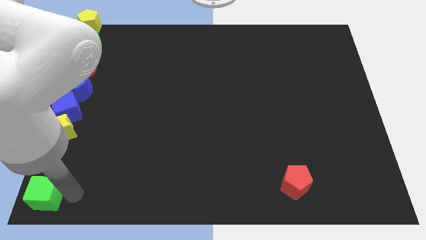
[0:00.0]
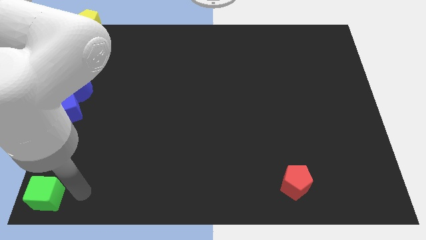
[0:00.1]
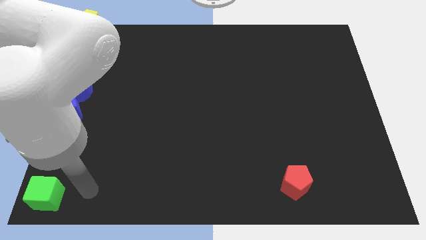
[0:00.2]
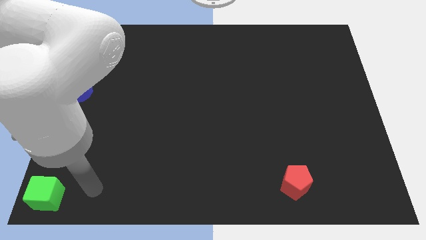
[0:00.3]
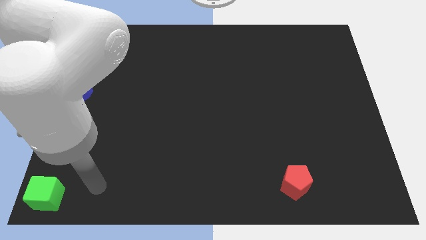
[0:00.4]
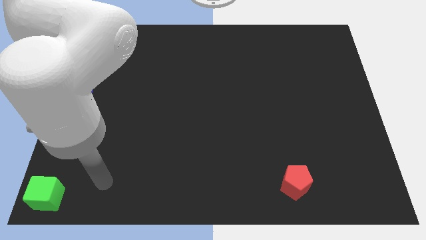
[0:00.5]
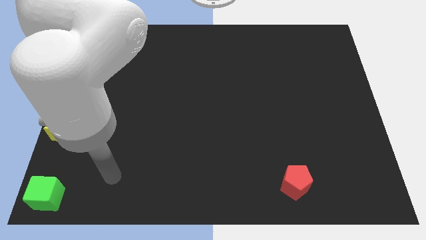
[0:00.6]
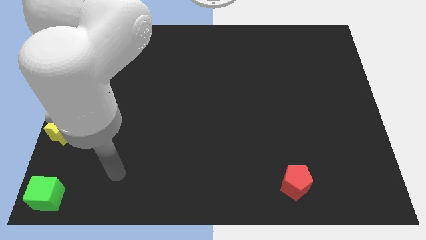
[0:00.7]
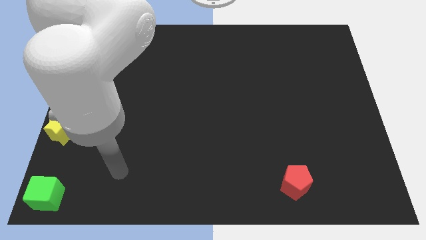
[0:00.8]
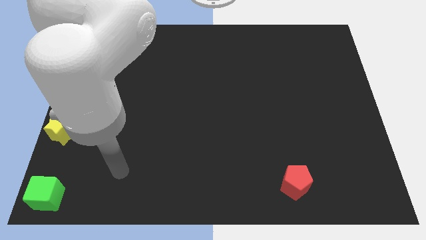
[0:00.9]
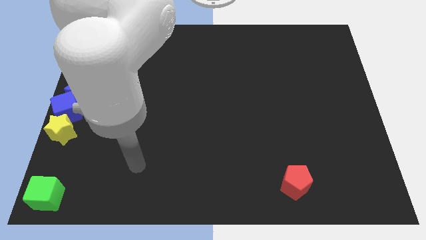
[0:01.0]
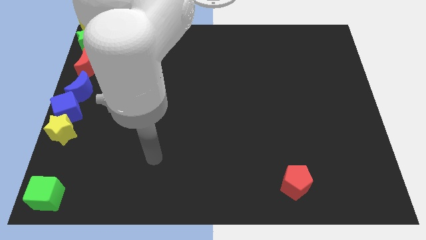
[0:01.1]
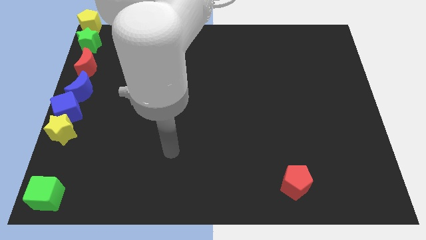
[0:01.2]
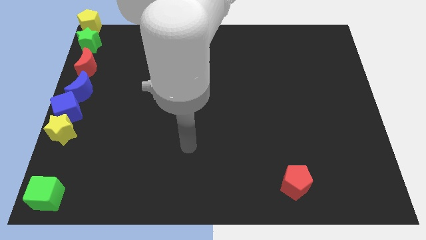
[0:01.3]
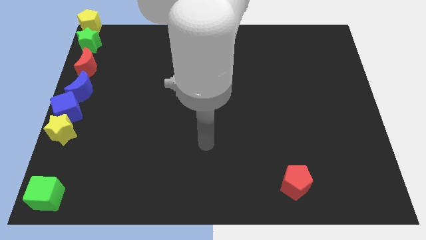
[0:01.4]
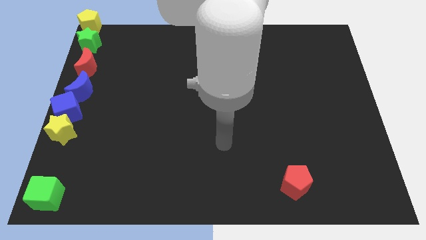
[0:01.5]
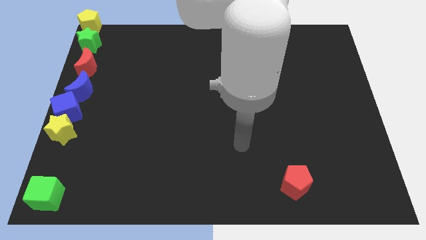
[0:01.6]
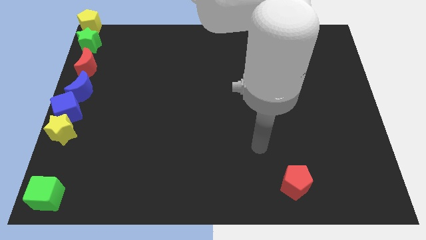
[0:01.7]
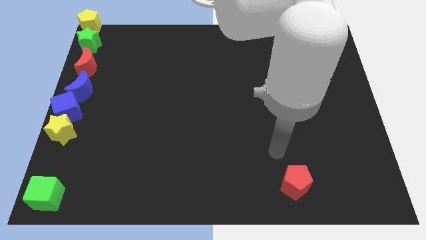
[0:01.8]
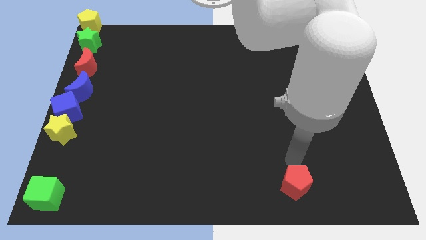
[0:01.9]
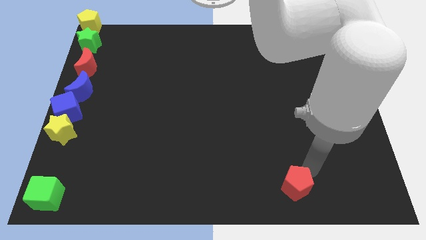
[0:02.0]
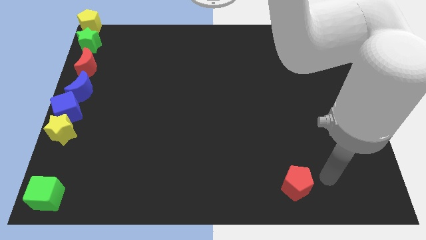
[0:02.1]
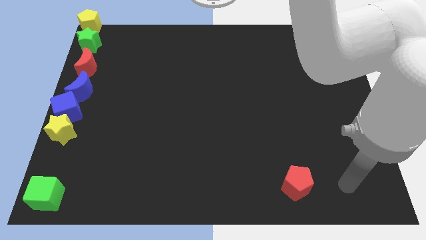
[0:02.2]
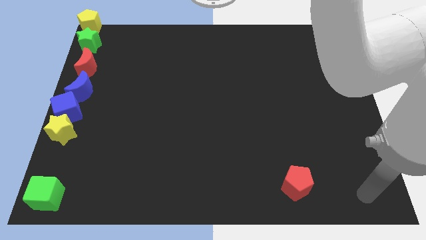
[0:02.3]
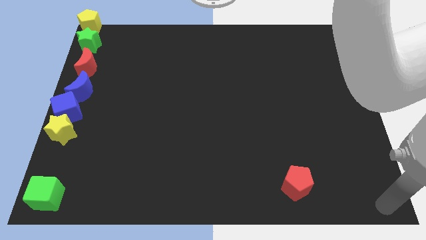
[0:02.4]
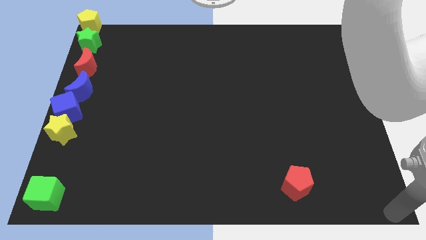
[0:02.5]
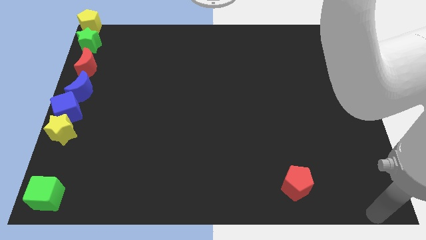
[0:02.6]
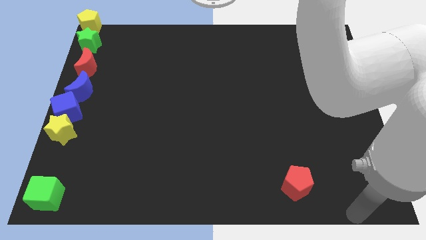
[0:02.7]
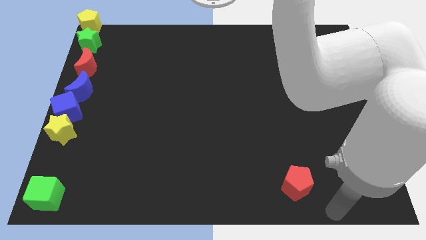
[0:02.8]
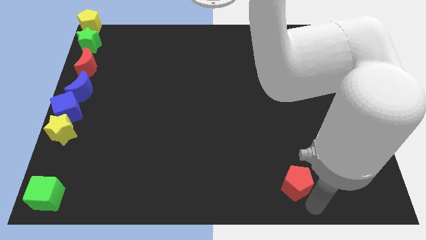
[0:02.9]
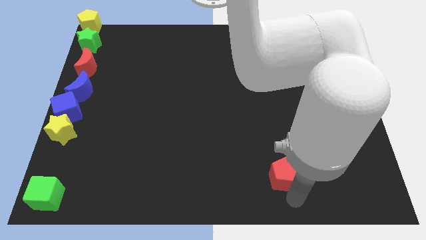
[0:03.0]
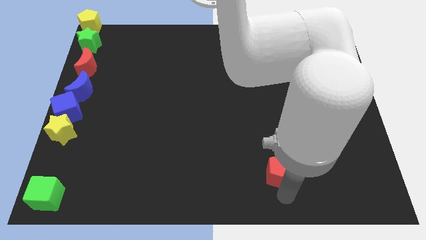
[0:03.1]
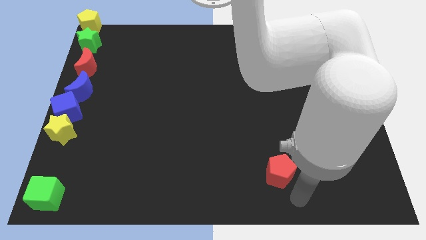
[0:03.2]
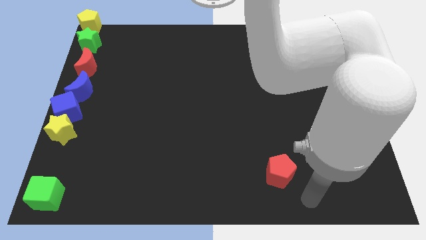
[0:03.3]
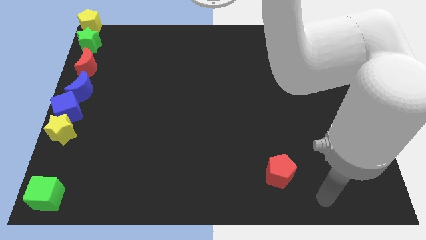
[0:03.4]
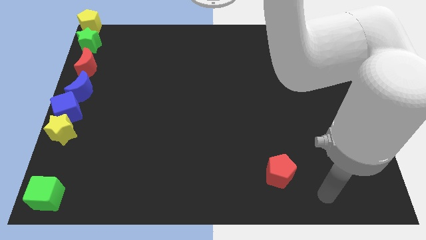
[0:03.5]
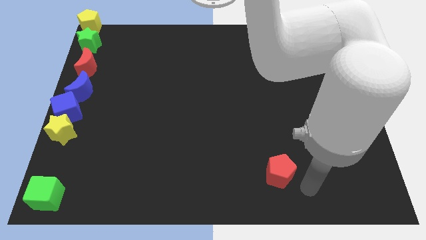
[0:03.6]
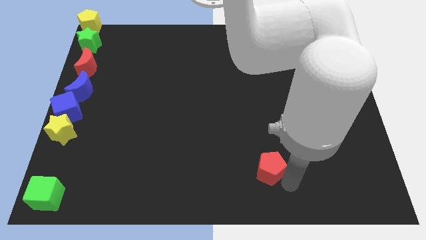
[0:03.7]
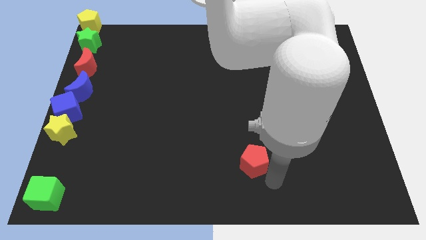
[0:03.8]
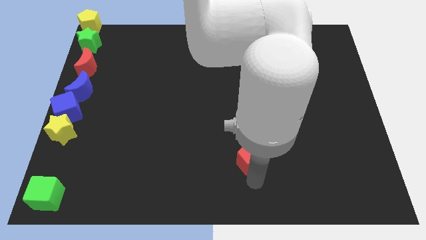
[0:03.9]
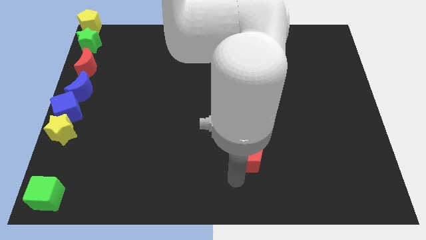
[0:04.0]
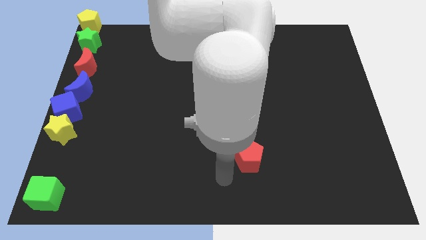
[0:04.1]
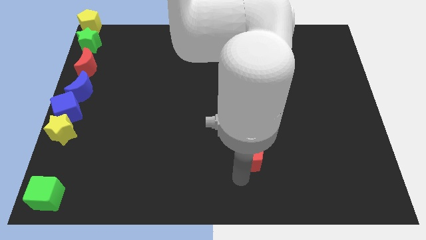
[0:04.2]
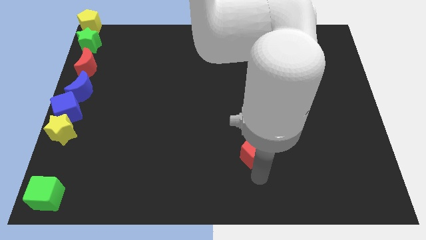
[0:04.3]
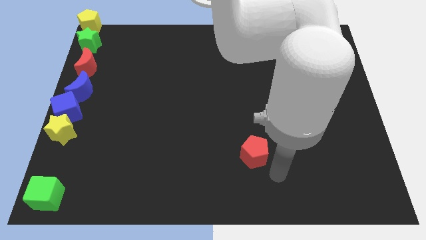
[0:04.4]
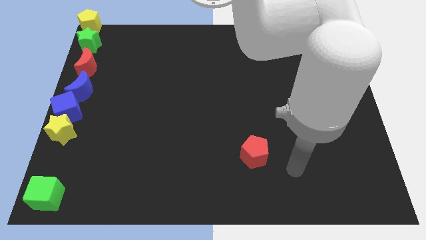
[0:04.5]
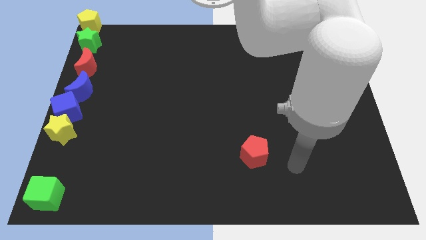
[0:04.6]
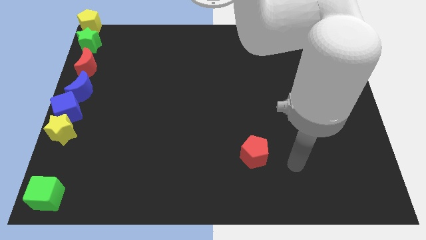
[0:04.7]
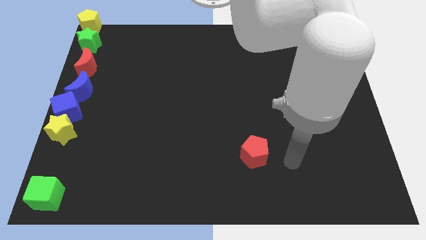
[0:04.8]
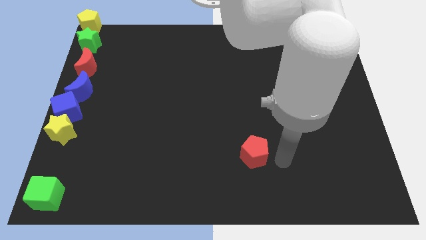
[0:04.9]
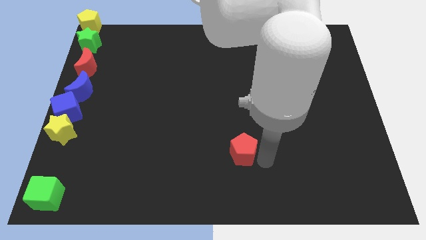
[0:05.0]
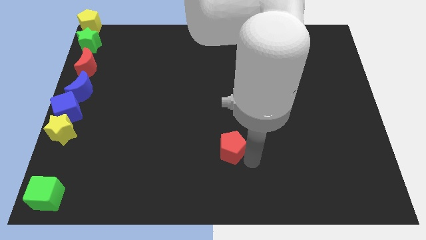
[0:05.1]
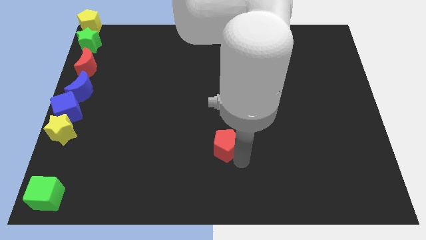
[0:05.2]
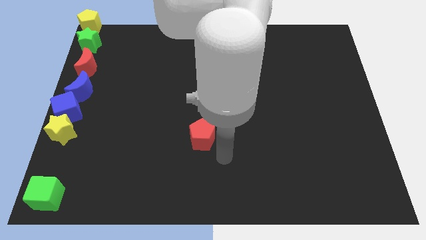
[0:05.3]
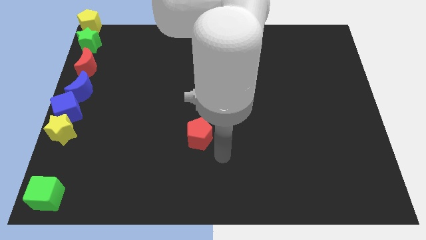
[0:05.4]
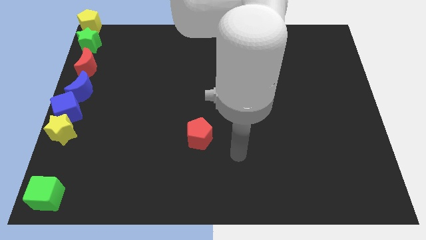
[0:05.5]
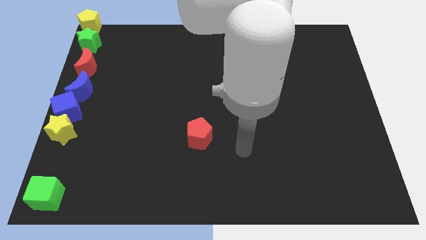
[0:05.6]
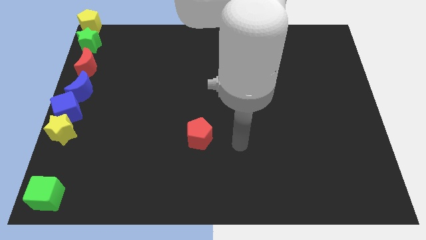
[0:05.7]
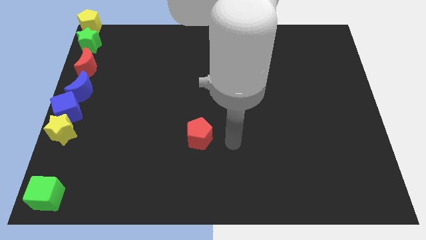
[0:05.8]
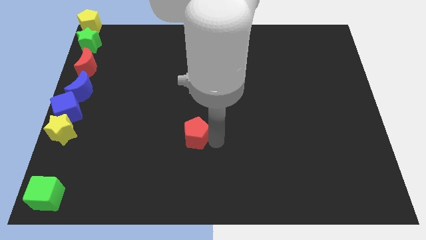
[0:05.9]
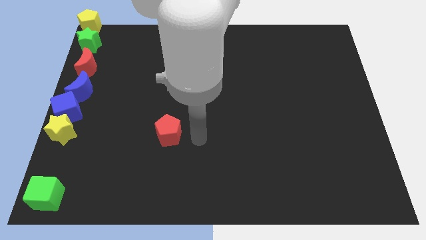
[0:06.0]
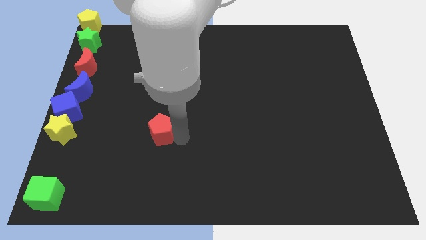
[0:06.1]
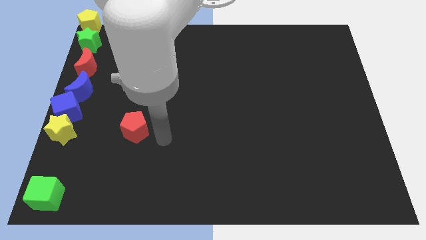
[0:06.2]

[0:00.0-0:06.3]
move the red pentagon to the right side of yellow star

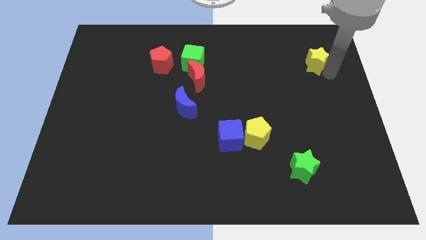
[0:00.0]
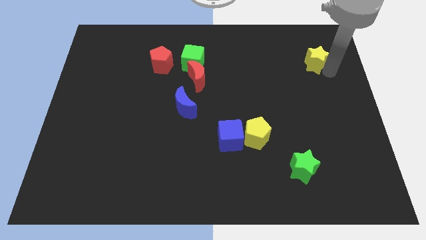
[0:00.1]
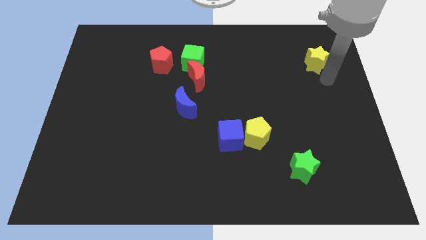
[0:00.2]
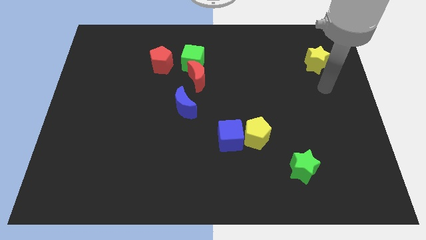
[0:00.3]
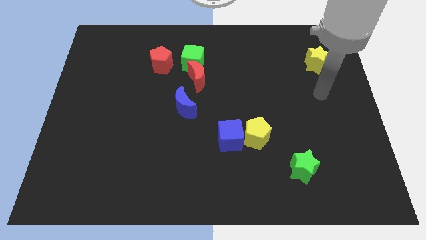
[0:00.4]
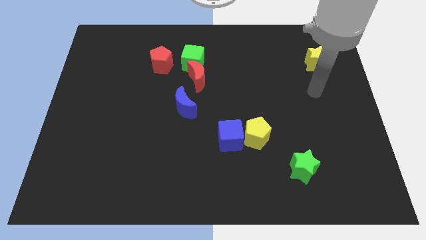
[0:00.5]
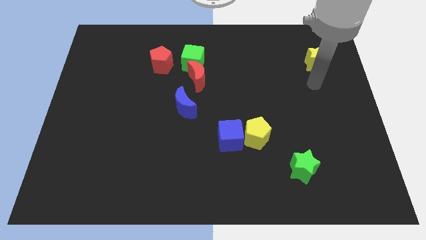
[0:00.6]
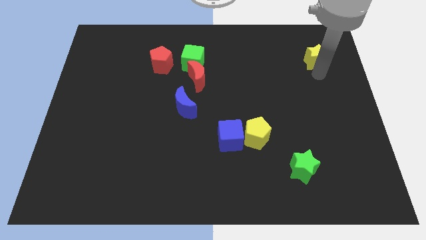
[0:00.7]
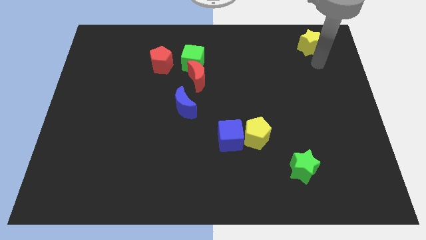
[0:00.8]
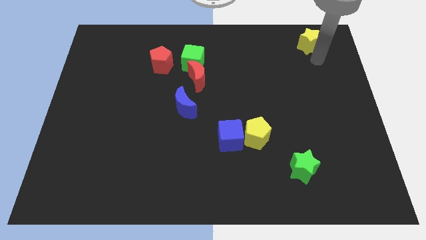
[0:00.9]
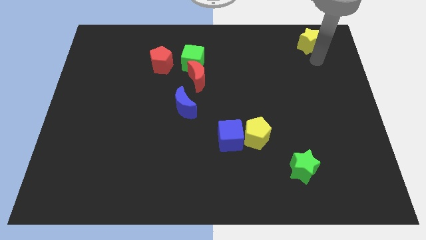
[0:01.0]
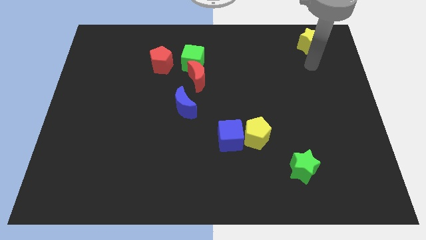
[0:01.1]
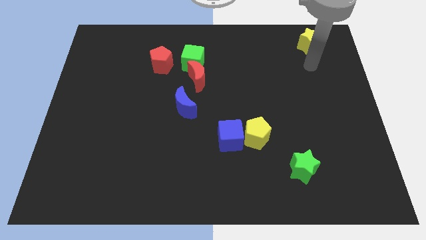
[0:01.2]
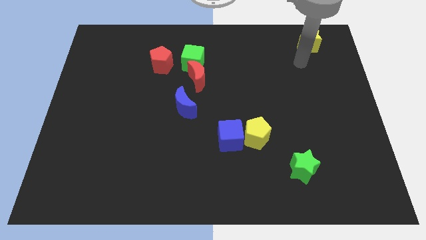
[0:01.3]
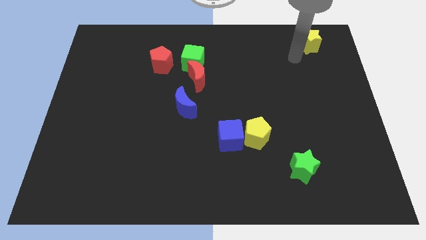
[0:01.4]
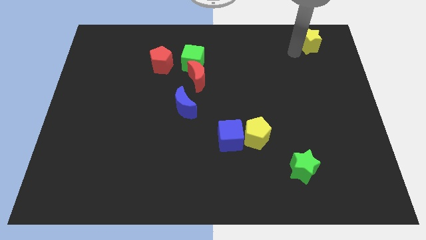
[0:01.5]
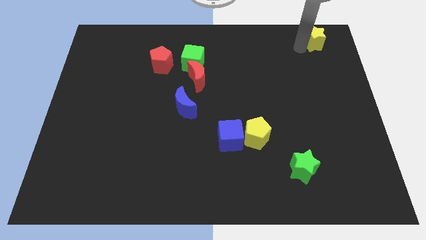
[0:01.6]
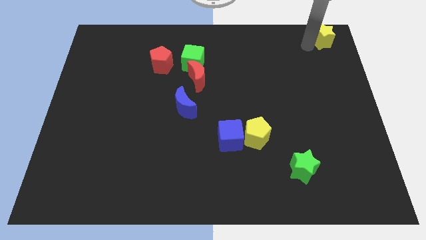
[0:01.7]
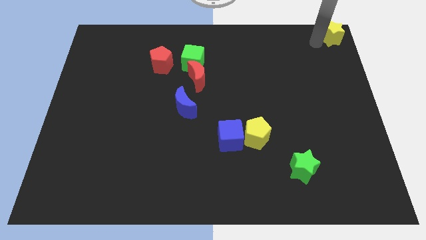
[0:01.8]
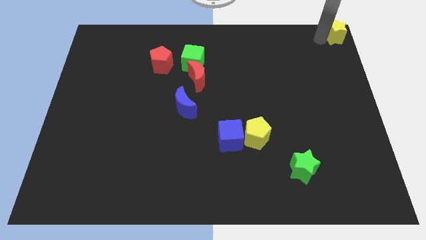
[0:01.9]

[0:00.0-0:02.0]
move the yellow star to the top right

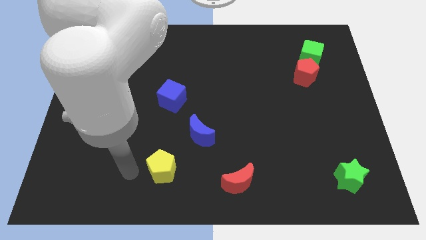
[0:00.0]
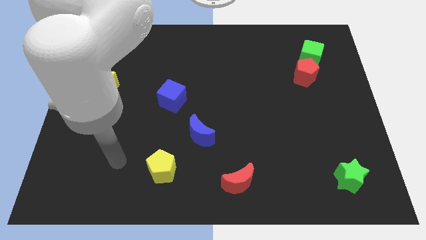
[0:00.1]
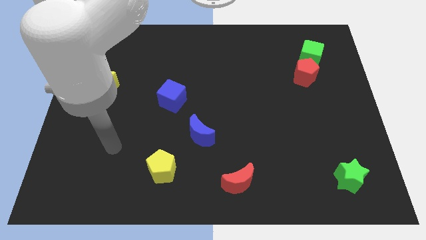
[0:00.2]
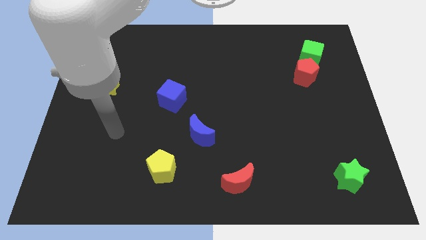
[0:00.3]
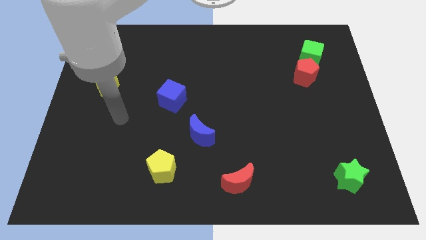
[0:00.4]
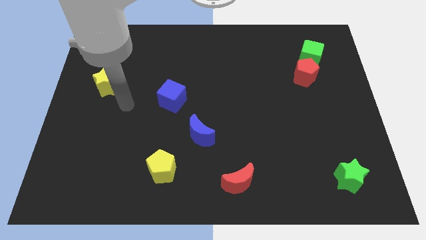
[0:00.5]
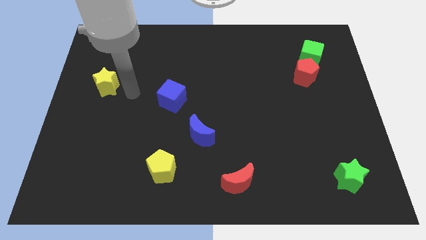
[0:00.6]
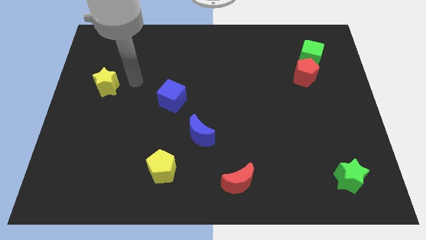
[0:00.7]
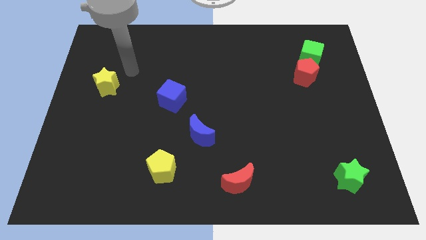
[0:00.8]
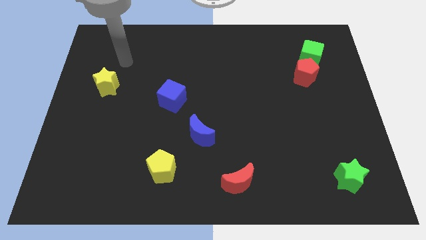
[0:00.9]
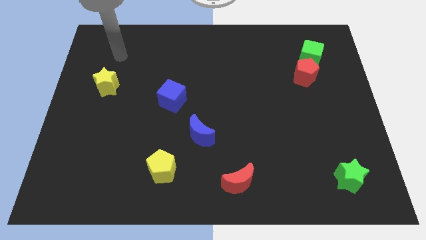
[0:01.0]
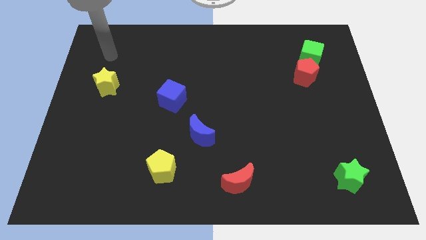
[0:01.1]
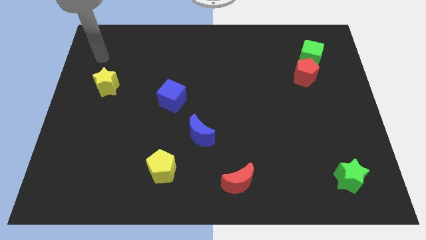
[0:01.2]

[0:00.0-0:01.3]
move your hand above the yellow star
